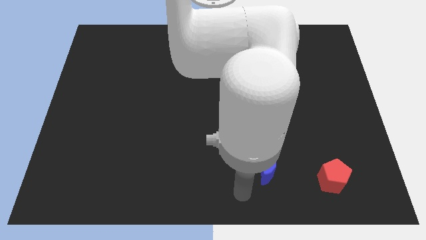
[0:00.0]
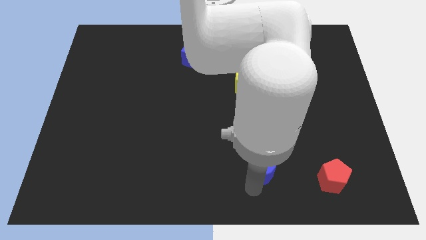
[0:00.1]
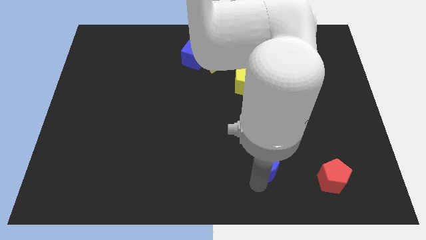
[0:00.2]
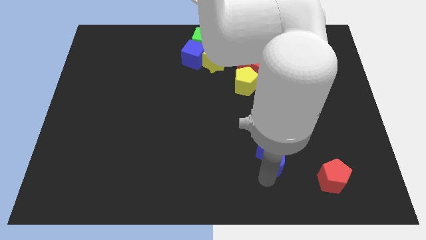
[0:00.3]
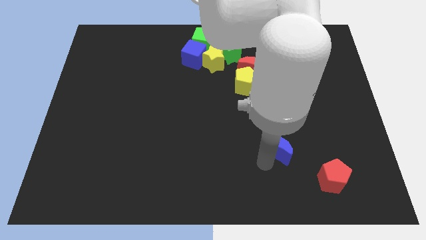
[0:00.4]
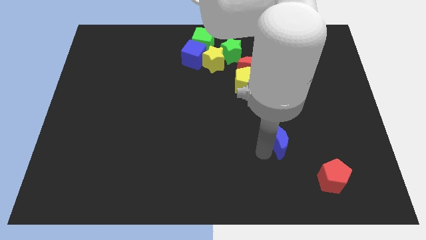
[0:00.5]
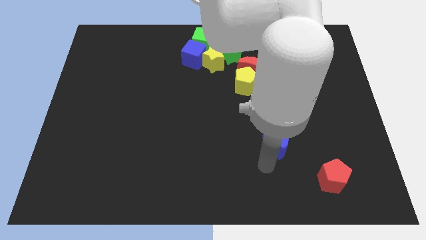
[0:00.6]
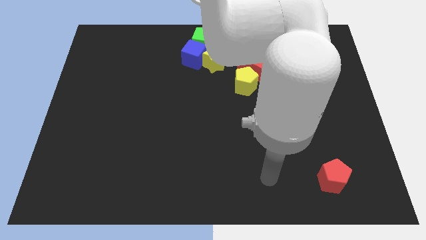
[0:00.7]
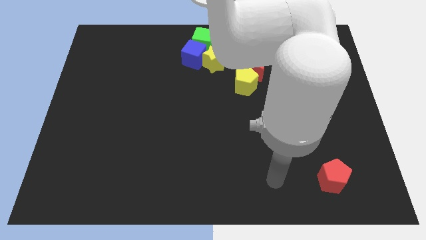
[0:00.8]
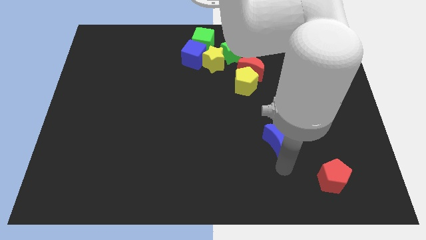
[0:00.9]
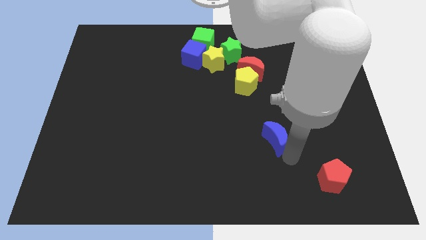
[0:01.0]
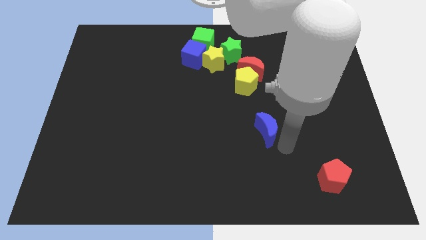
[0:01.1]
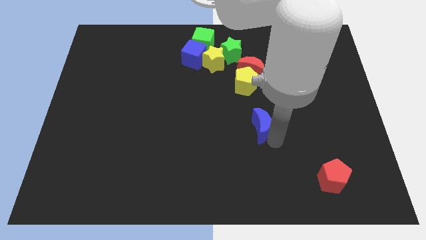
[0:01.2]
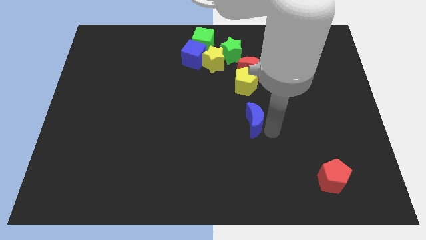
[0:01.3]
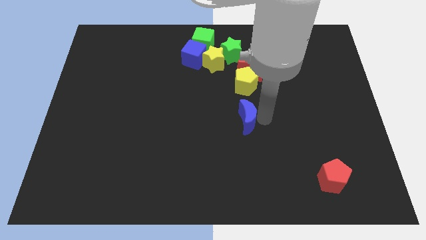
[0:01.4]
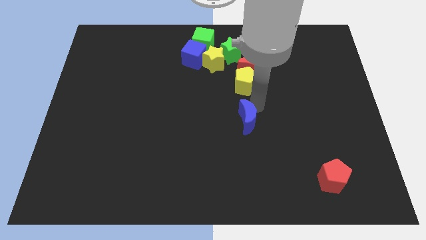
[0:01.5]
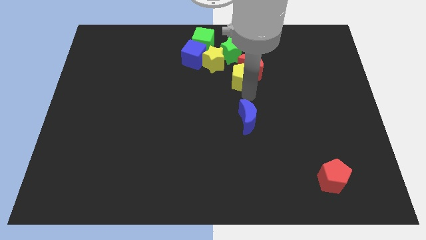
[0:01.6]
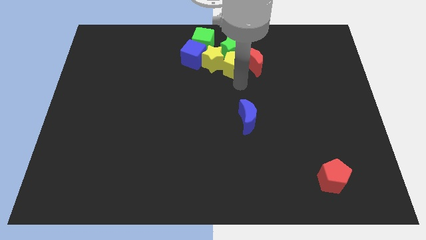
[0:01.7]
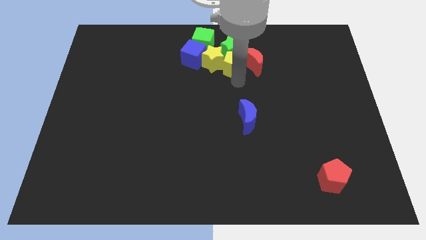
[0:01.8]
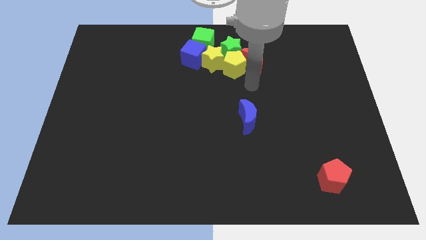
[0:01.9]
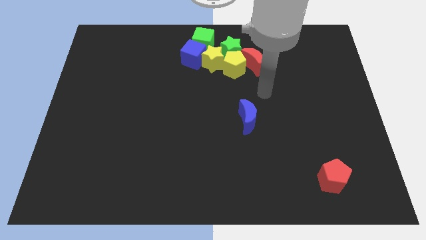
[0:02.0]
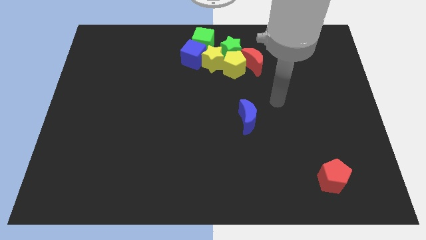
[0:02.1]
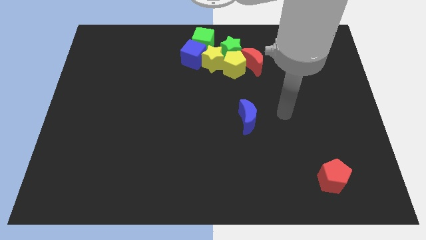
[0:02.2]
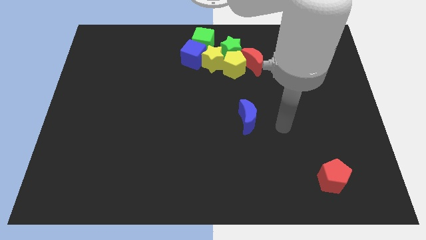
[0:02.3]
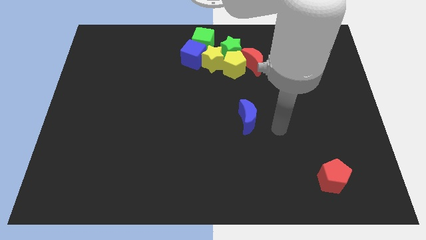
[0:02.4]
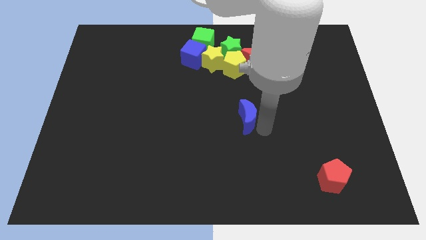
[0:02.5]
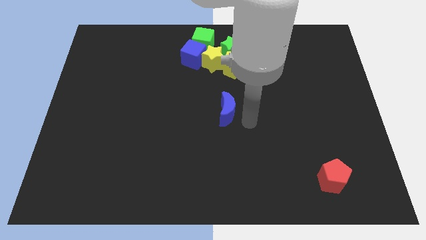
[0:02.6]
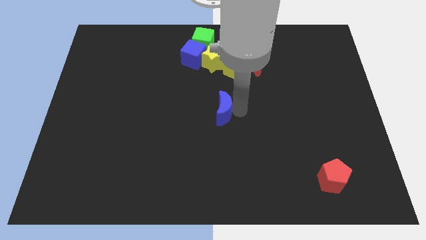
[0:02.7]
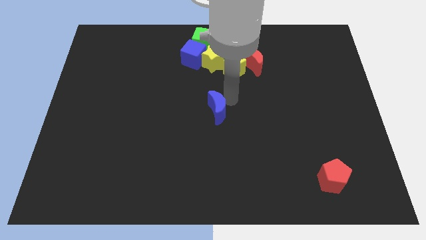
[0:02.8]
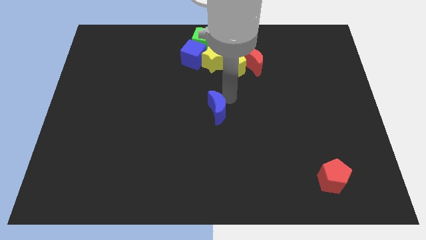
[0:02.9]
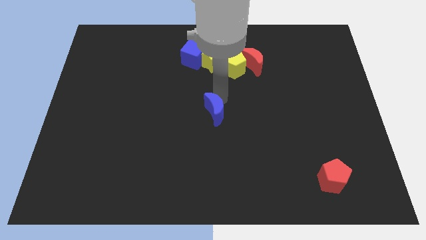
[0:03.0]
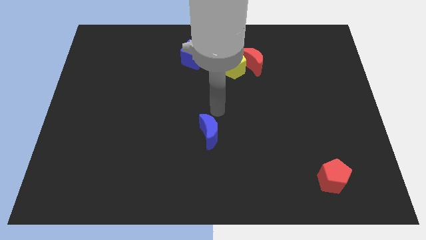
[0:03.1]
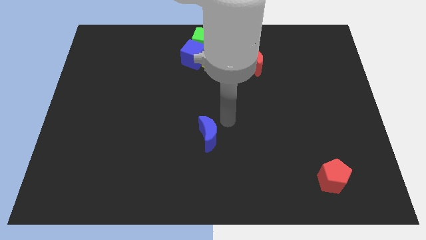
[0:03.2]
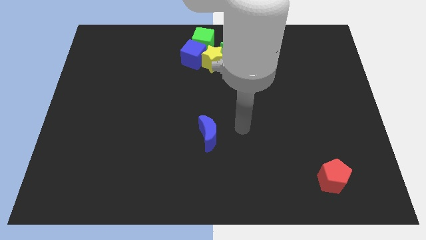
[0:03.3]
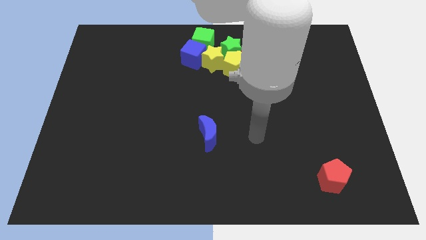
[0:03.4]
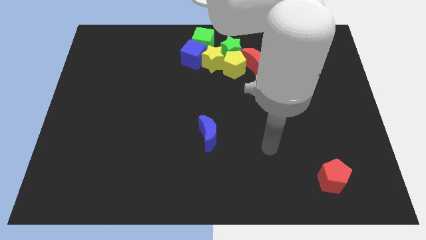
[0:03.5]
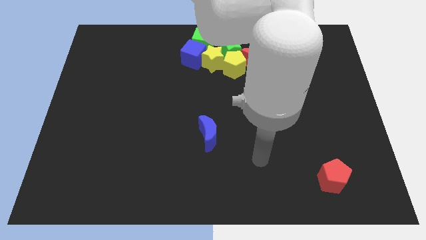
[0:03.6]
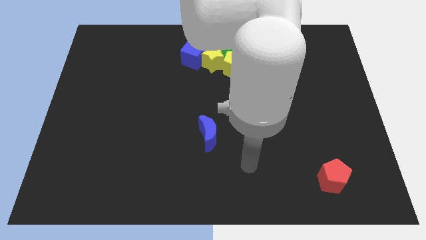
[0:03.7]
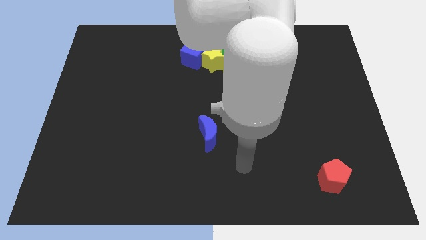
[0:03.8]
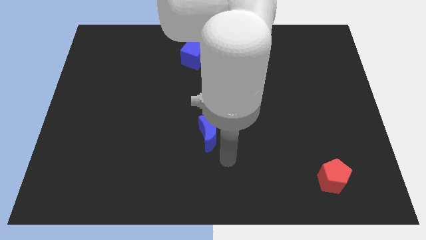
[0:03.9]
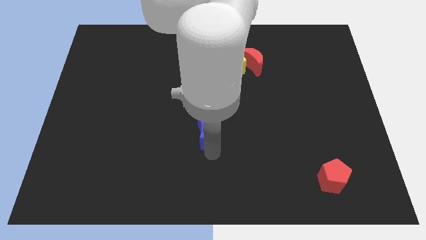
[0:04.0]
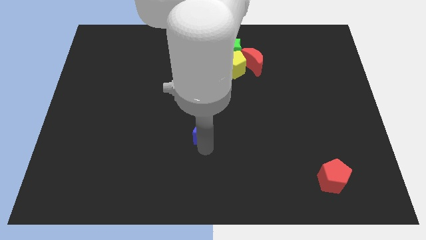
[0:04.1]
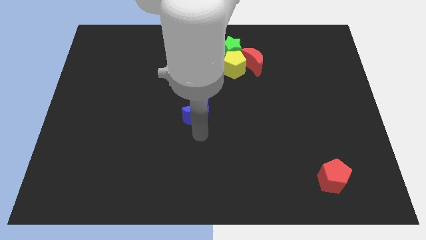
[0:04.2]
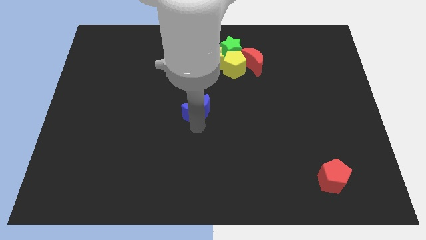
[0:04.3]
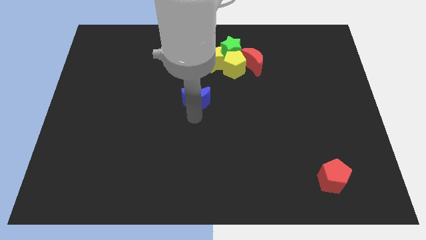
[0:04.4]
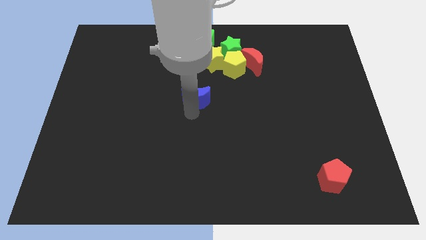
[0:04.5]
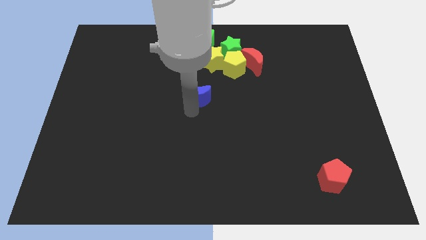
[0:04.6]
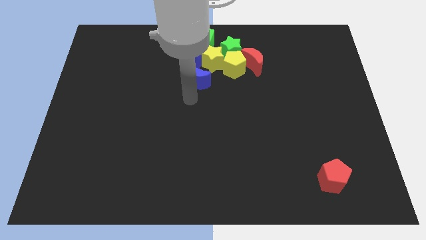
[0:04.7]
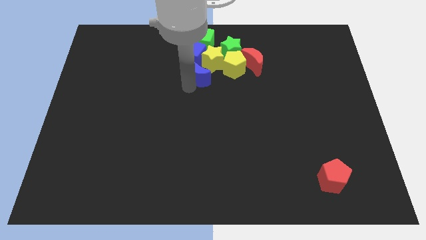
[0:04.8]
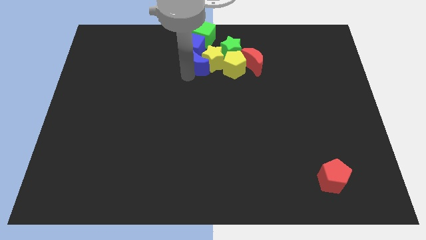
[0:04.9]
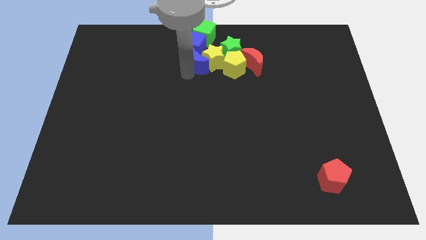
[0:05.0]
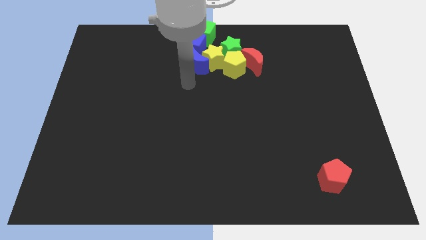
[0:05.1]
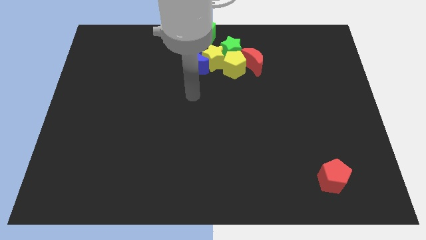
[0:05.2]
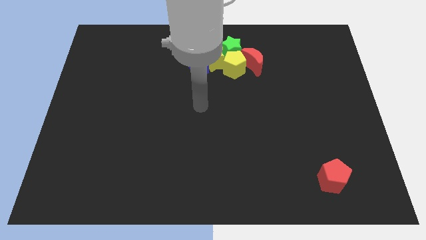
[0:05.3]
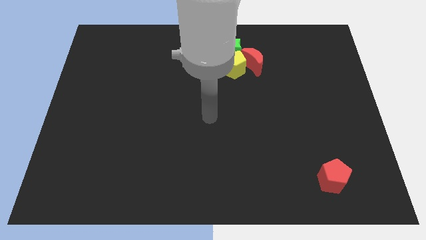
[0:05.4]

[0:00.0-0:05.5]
push the blue crescent into the blue cube

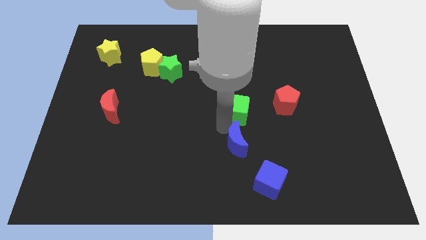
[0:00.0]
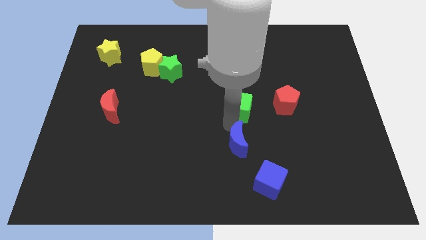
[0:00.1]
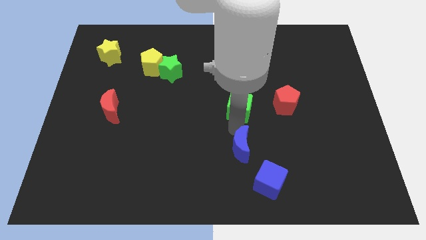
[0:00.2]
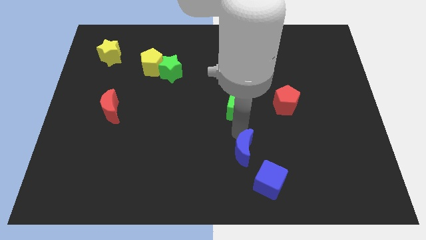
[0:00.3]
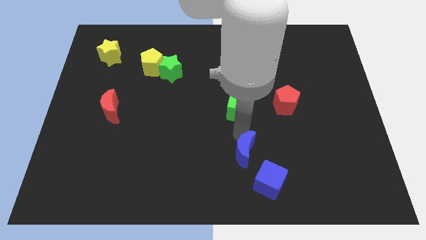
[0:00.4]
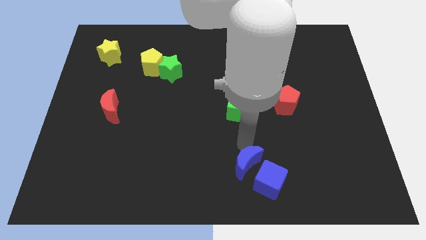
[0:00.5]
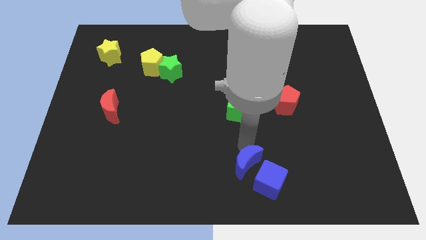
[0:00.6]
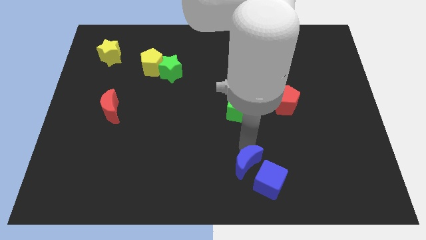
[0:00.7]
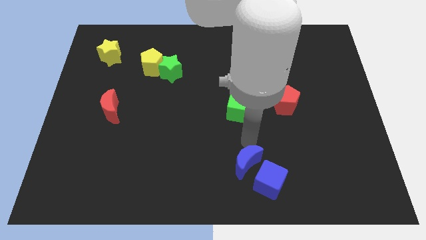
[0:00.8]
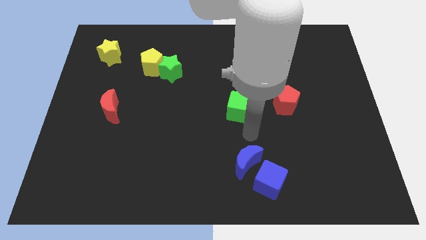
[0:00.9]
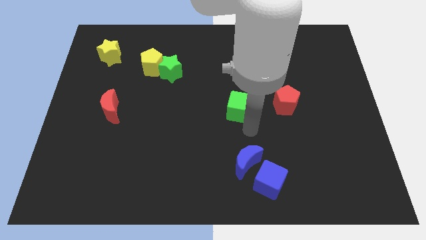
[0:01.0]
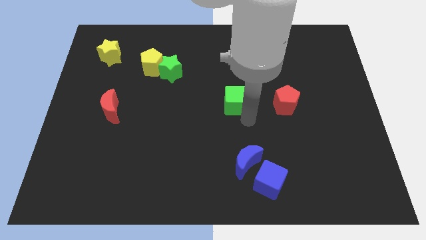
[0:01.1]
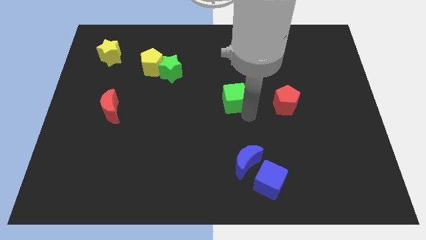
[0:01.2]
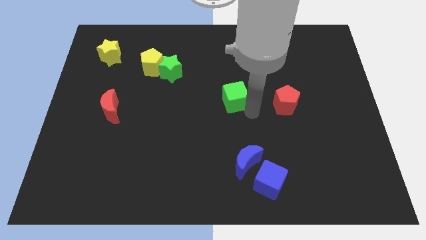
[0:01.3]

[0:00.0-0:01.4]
place the green cube parallel to the red pentagon

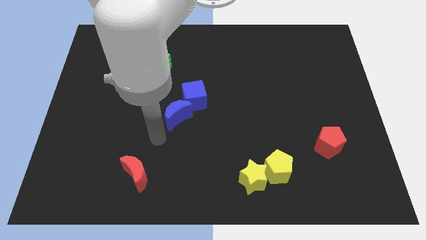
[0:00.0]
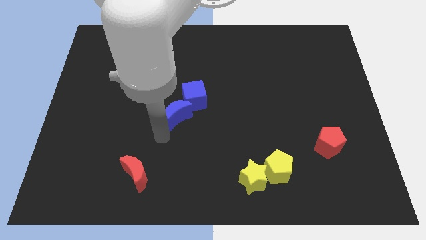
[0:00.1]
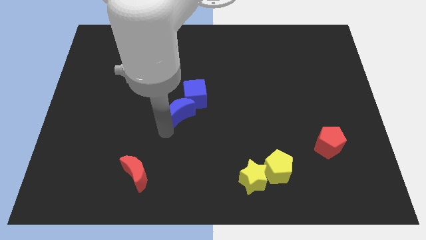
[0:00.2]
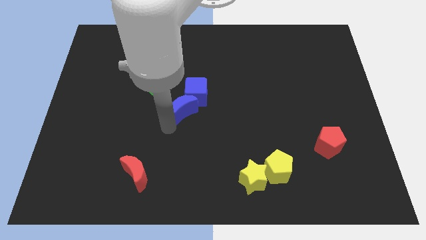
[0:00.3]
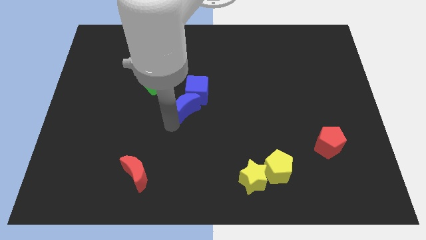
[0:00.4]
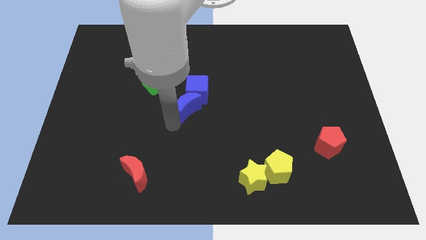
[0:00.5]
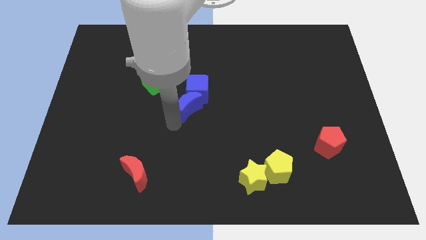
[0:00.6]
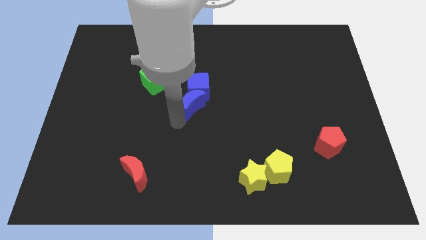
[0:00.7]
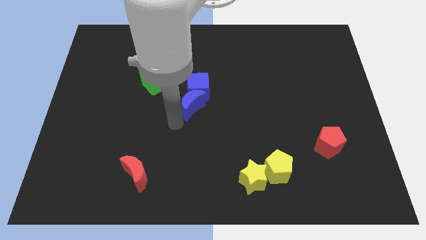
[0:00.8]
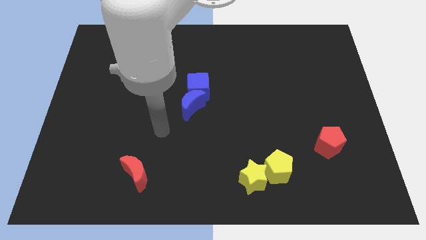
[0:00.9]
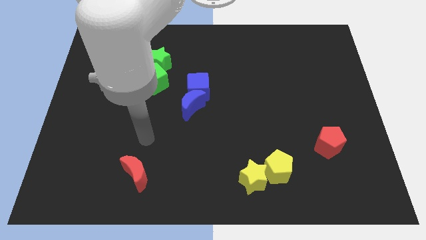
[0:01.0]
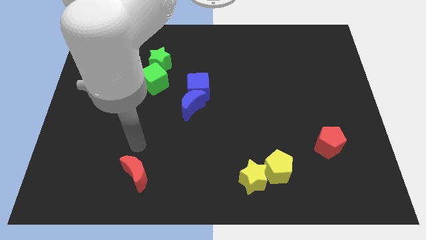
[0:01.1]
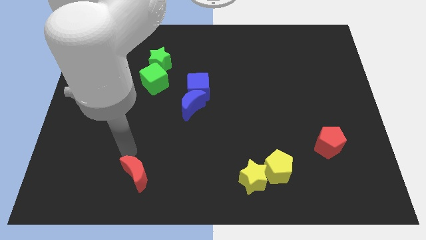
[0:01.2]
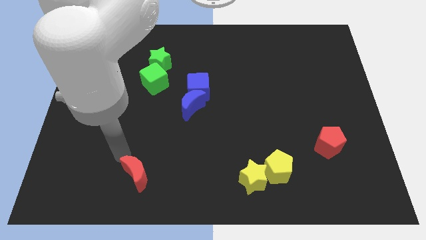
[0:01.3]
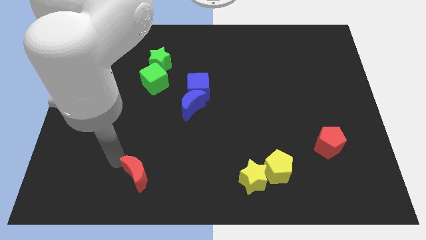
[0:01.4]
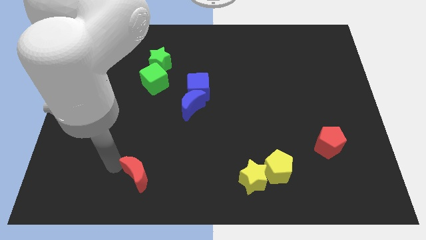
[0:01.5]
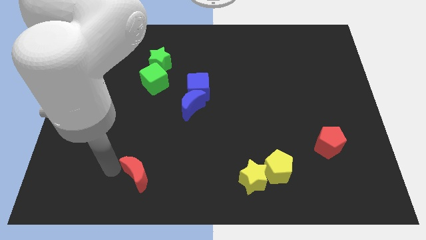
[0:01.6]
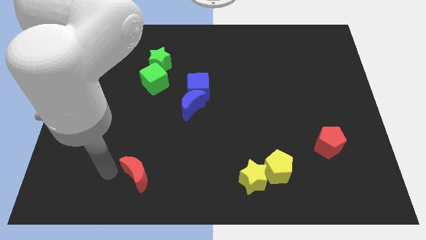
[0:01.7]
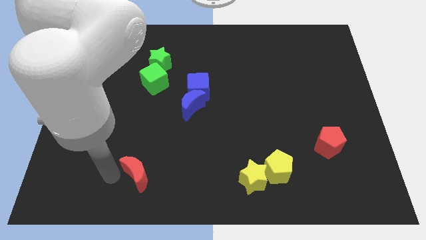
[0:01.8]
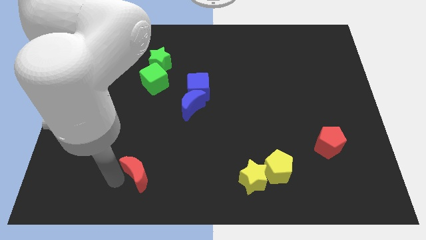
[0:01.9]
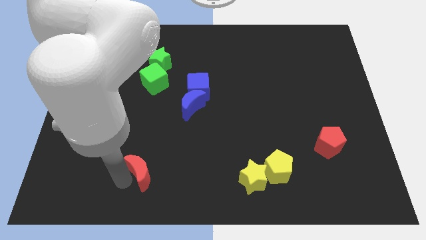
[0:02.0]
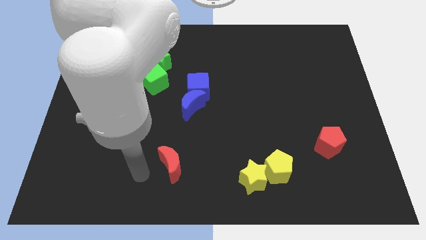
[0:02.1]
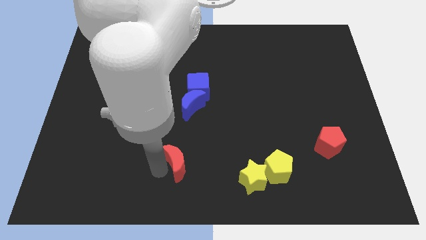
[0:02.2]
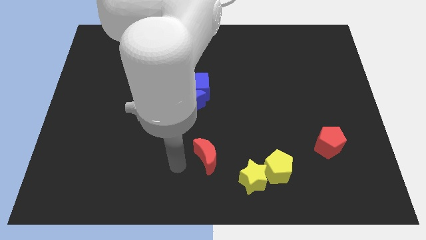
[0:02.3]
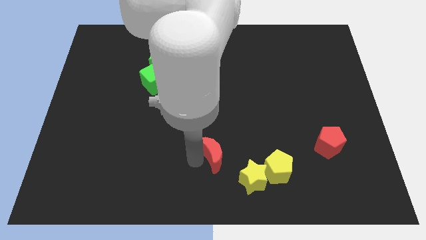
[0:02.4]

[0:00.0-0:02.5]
push red crescent below blue crescent
